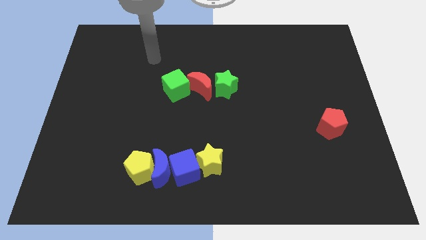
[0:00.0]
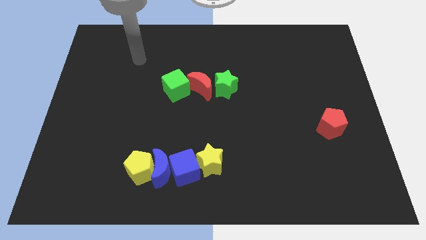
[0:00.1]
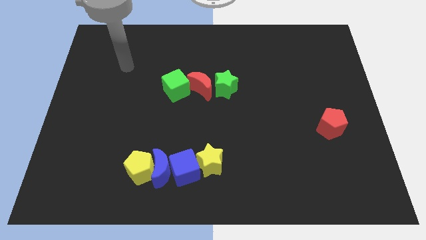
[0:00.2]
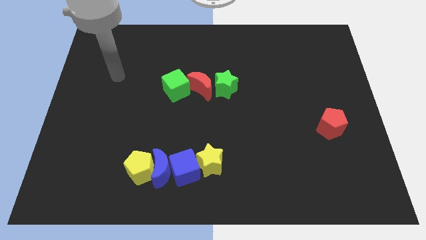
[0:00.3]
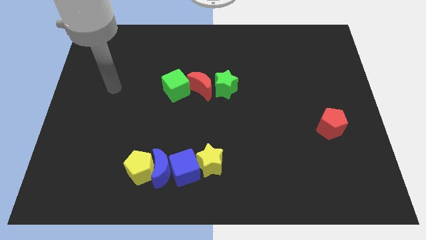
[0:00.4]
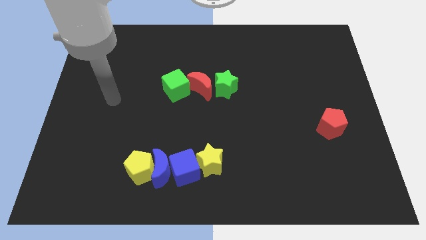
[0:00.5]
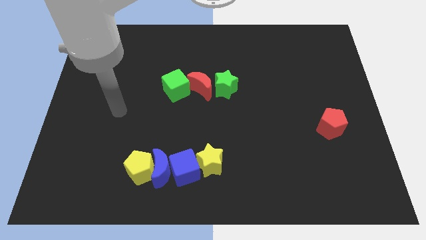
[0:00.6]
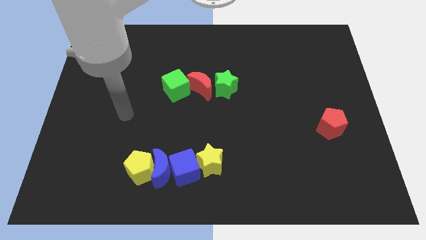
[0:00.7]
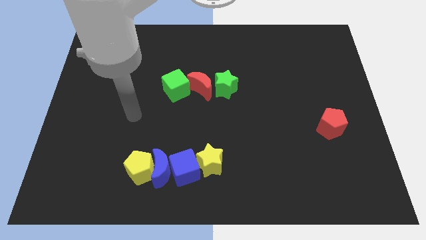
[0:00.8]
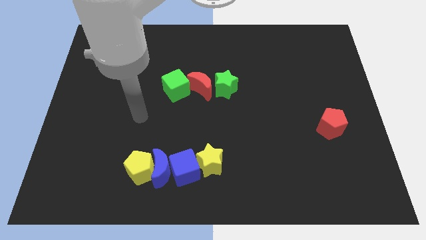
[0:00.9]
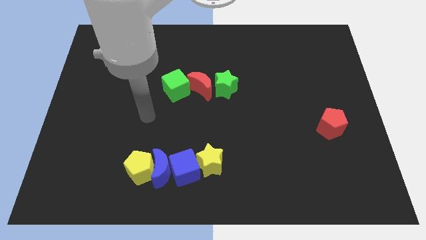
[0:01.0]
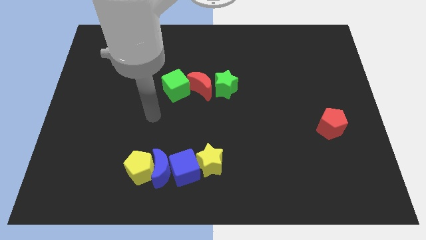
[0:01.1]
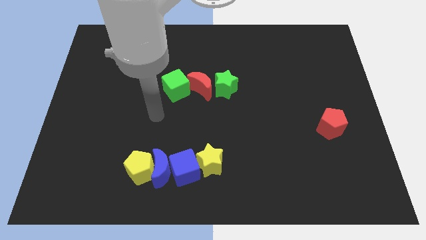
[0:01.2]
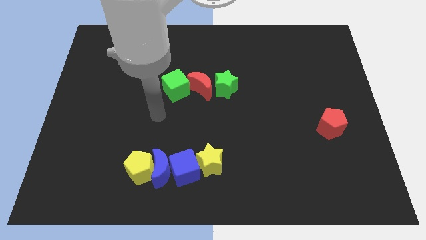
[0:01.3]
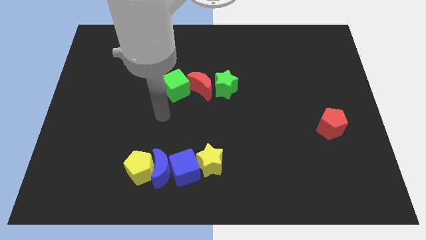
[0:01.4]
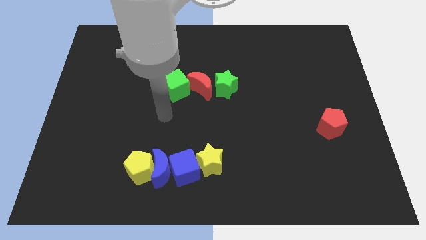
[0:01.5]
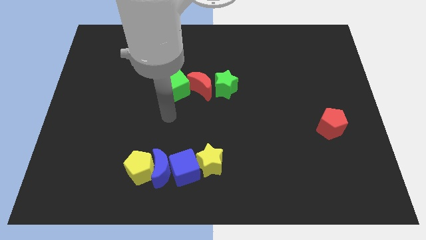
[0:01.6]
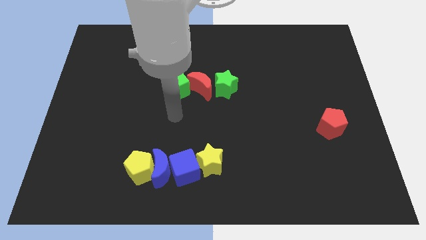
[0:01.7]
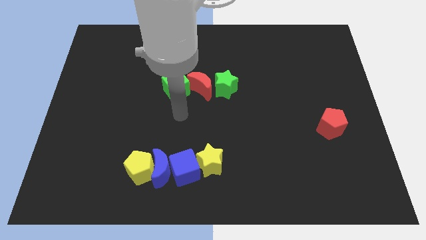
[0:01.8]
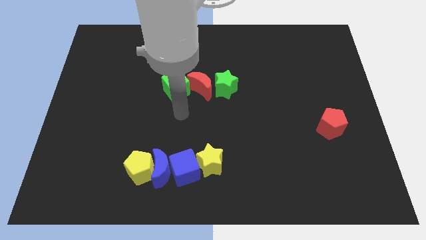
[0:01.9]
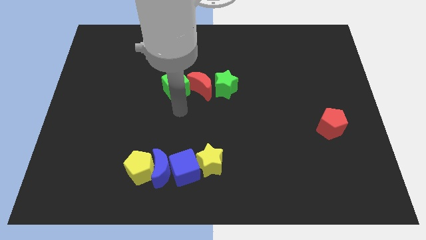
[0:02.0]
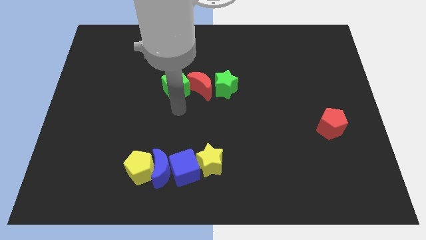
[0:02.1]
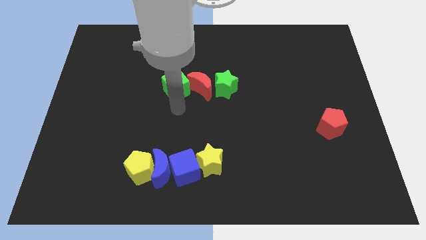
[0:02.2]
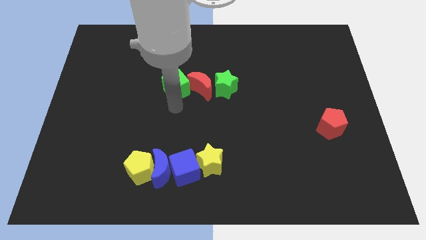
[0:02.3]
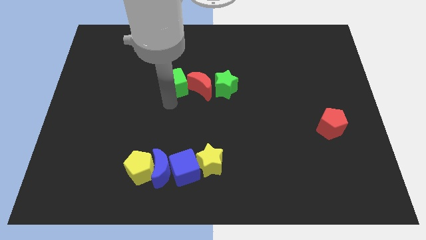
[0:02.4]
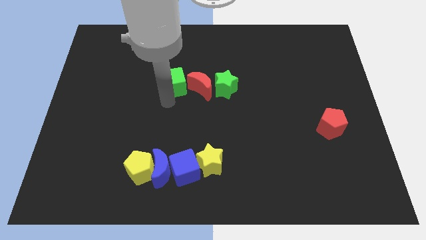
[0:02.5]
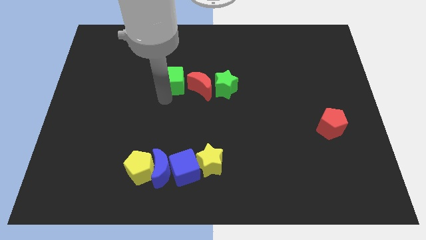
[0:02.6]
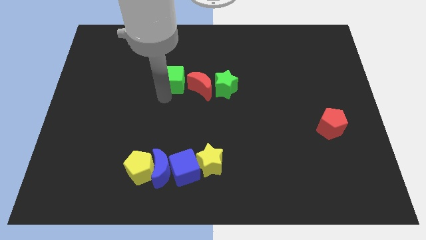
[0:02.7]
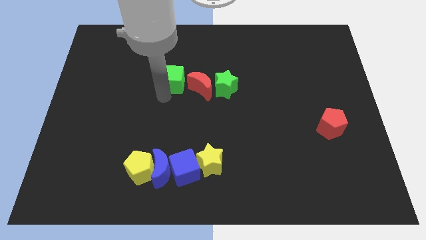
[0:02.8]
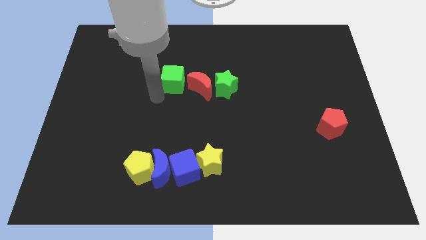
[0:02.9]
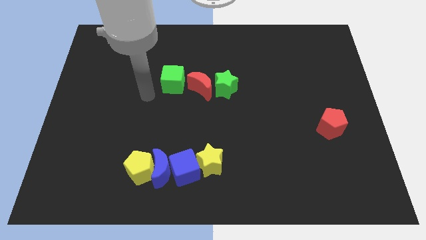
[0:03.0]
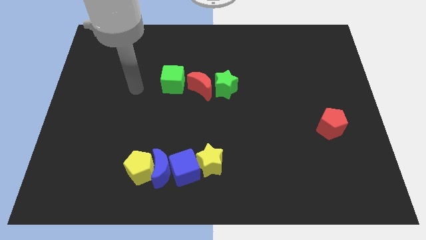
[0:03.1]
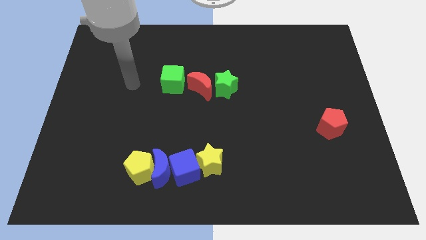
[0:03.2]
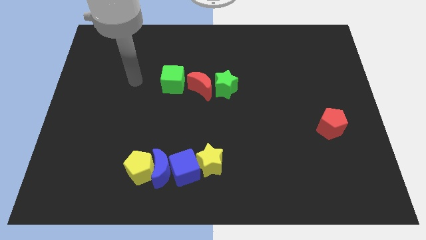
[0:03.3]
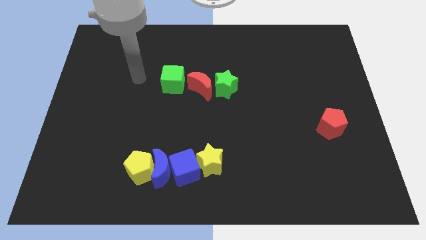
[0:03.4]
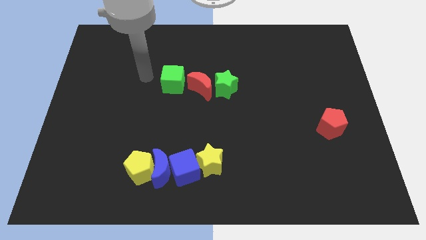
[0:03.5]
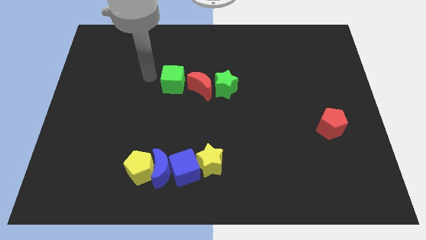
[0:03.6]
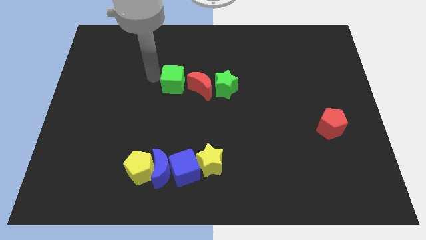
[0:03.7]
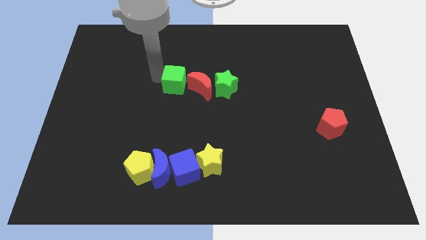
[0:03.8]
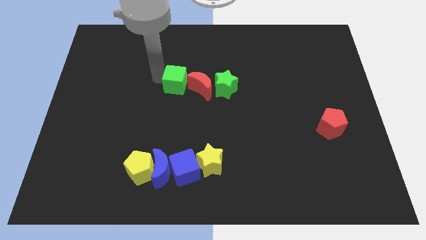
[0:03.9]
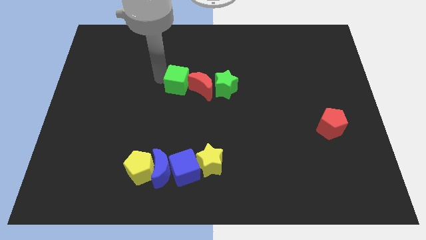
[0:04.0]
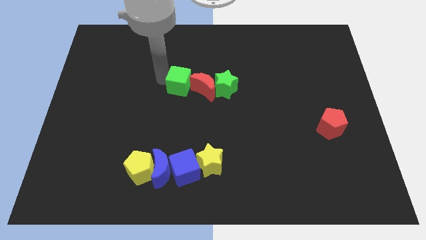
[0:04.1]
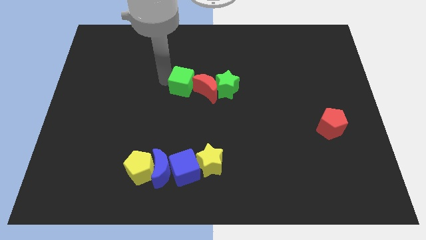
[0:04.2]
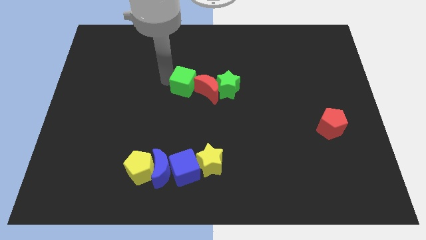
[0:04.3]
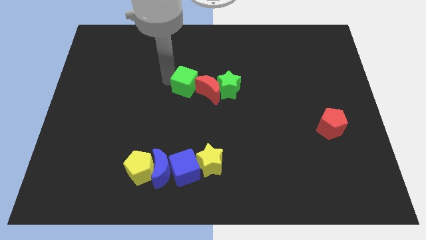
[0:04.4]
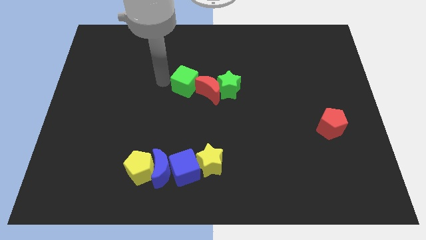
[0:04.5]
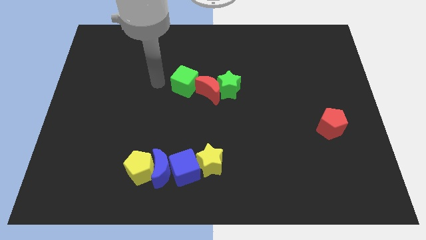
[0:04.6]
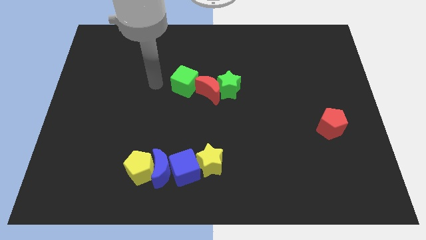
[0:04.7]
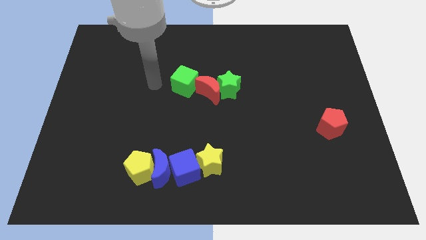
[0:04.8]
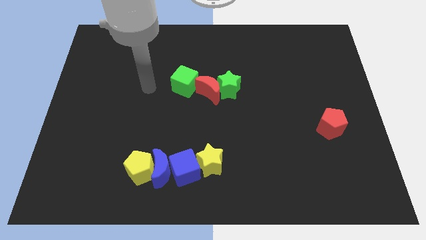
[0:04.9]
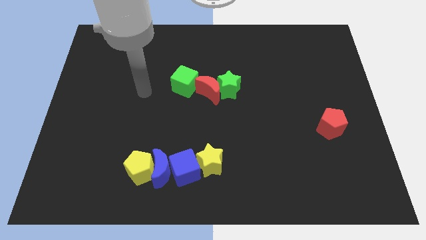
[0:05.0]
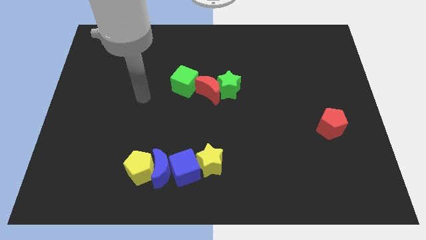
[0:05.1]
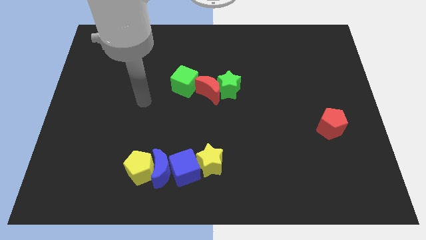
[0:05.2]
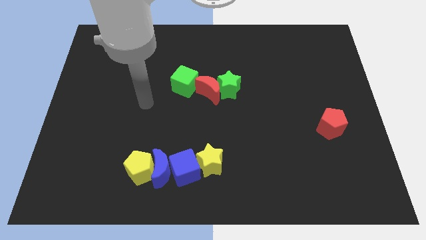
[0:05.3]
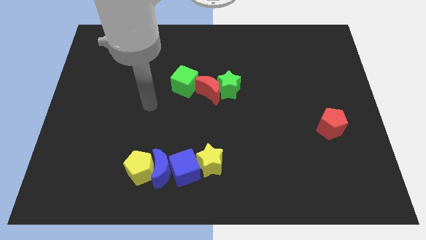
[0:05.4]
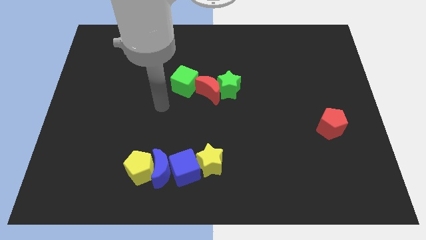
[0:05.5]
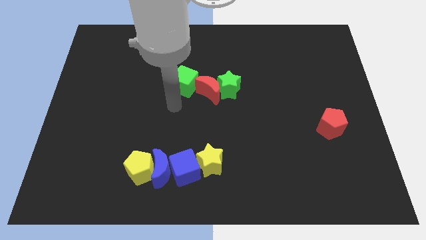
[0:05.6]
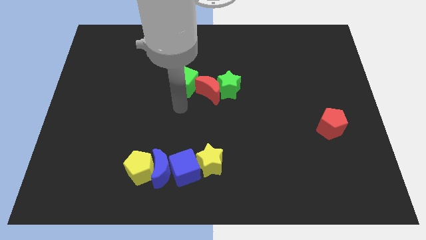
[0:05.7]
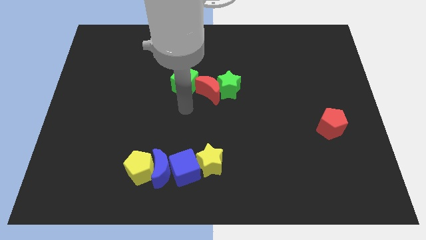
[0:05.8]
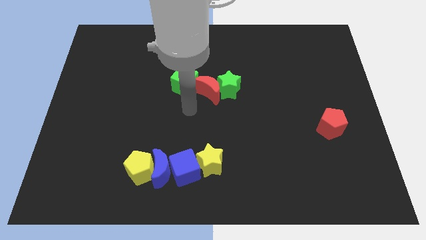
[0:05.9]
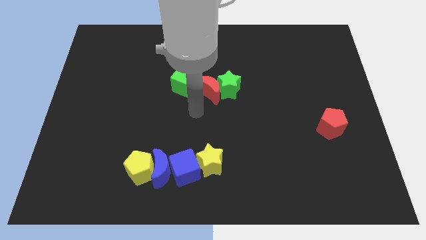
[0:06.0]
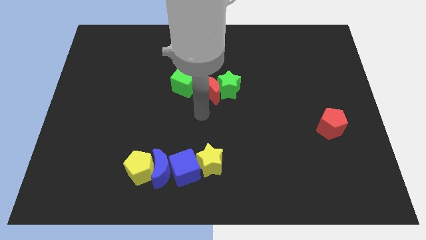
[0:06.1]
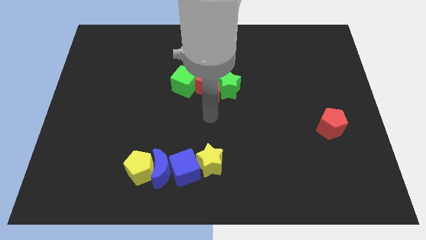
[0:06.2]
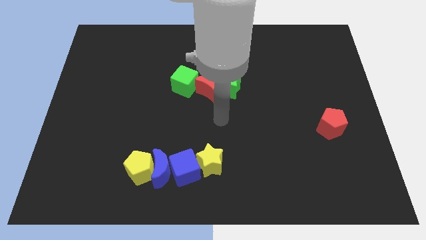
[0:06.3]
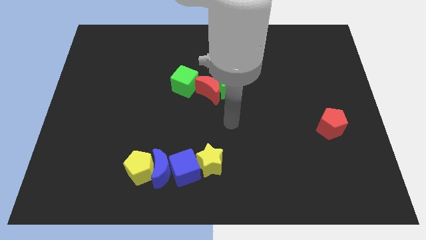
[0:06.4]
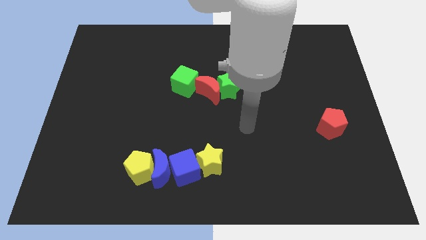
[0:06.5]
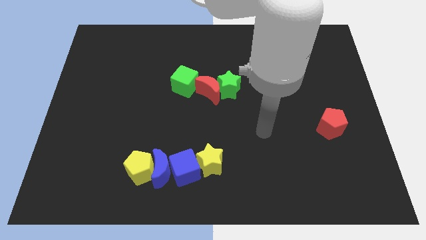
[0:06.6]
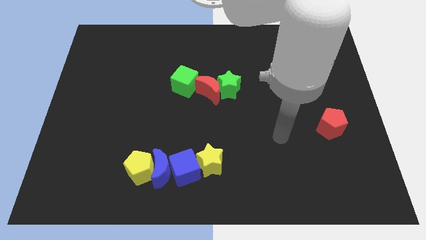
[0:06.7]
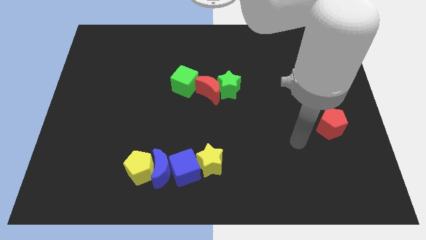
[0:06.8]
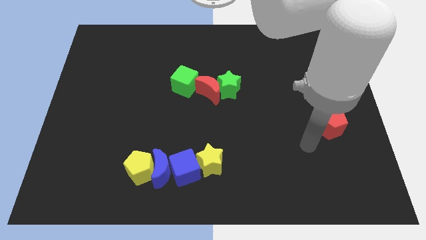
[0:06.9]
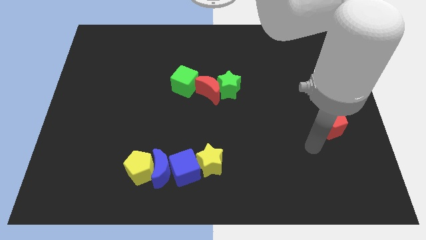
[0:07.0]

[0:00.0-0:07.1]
move the green cube red moon and green star middle of the board

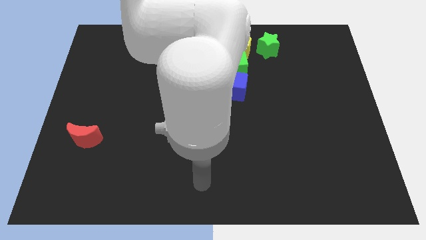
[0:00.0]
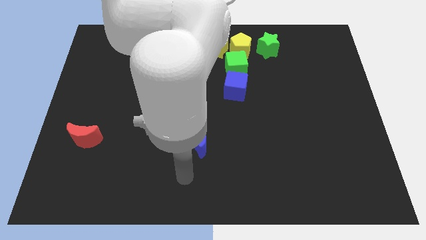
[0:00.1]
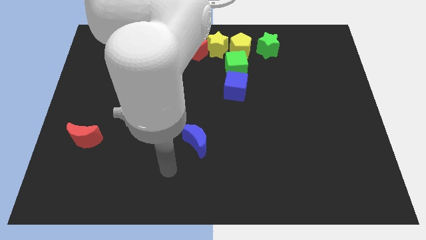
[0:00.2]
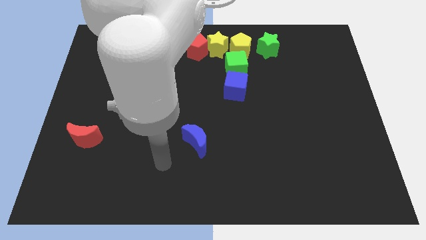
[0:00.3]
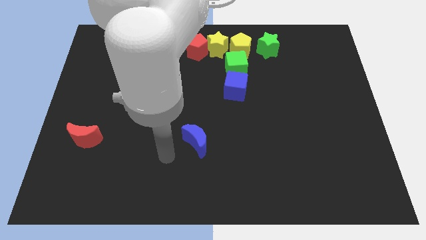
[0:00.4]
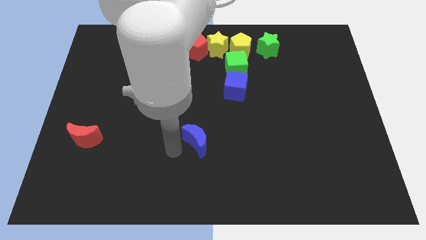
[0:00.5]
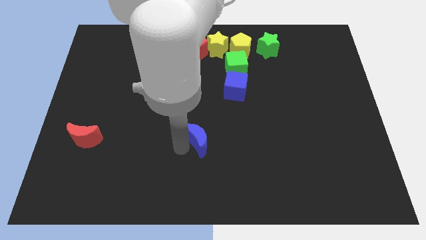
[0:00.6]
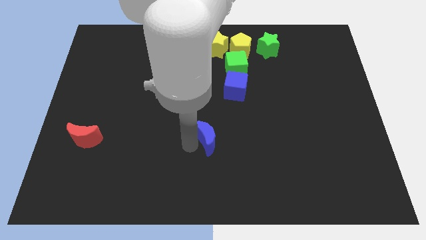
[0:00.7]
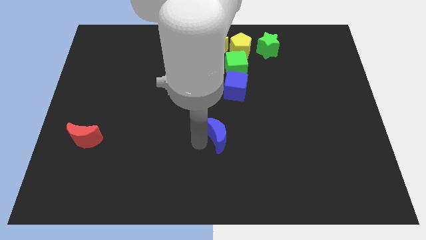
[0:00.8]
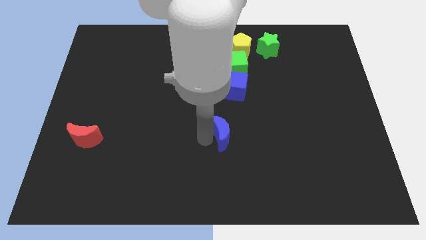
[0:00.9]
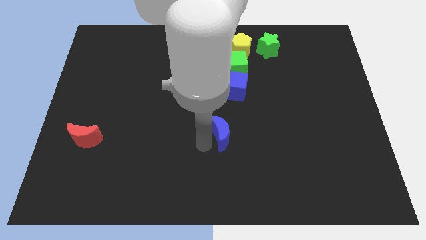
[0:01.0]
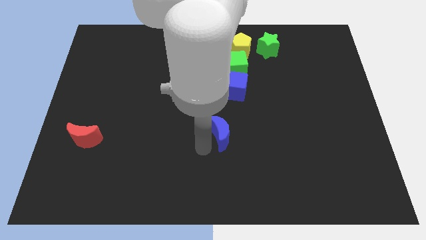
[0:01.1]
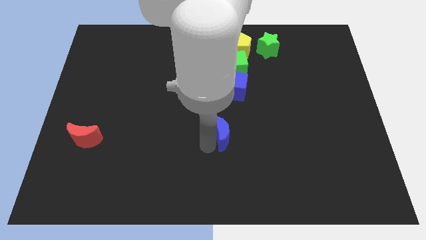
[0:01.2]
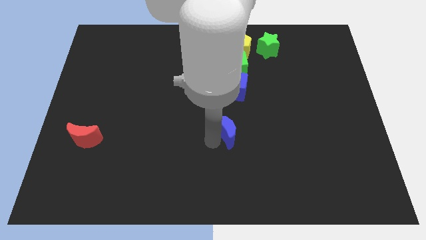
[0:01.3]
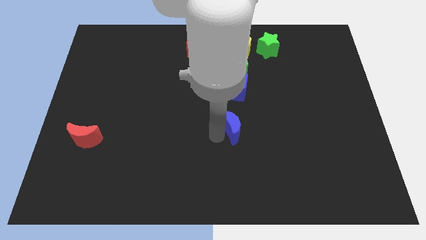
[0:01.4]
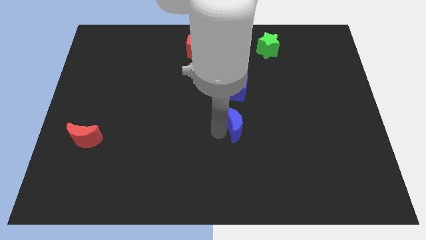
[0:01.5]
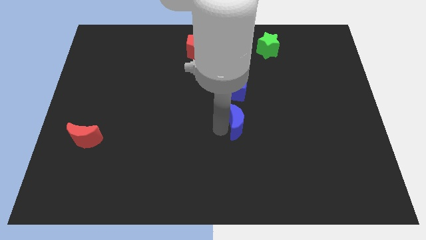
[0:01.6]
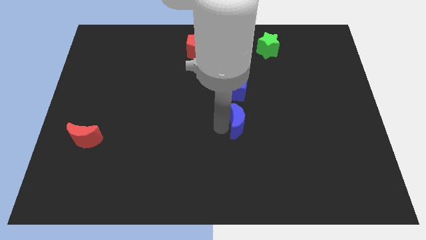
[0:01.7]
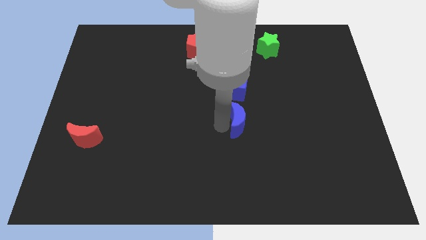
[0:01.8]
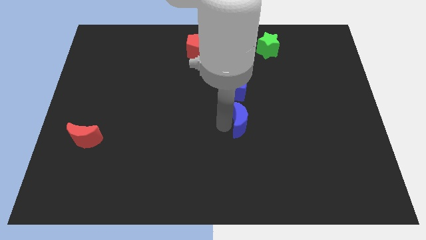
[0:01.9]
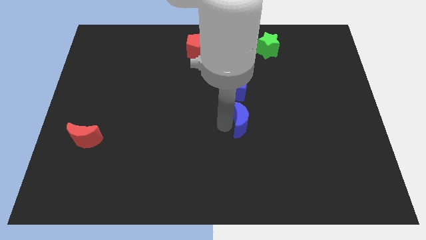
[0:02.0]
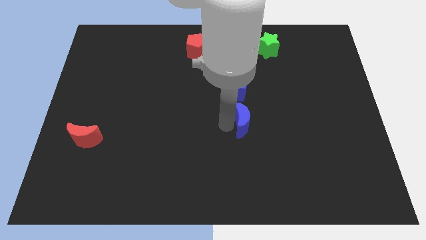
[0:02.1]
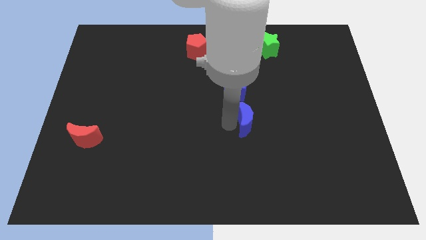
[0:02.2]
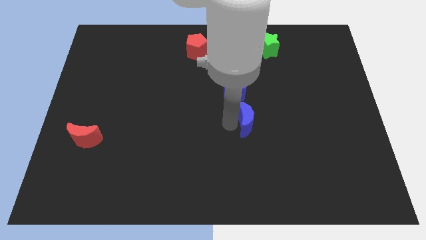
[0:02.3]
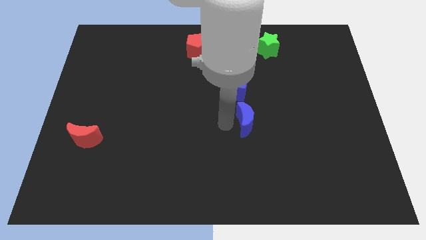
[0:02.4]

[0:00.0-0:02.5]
place the blue moon below the blue cube
